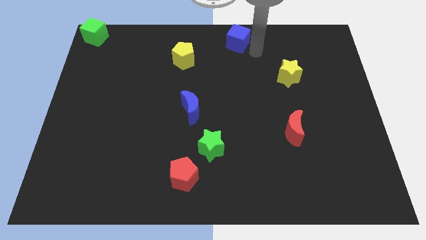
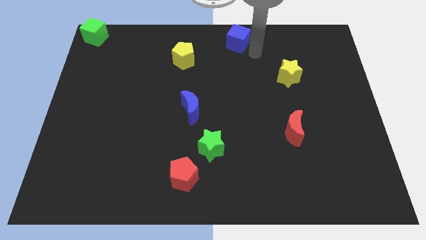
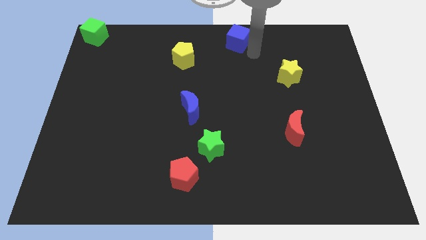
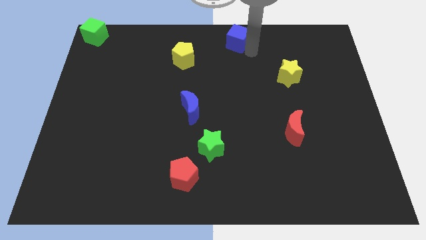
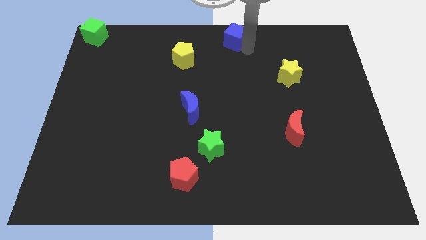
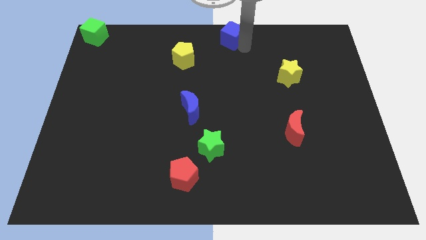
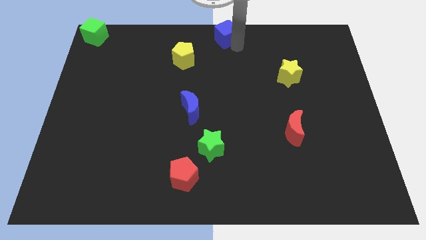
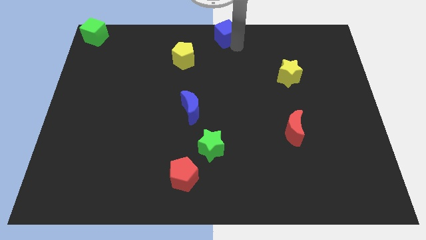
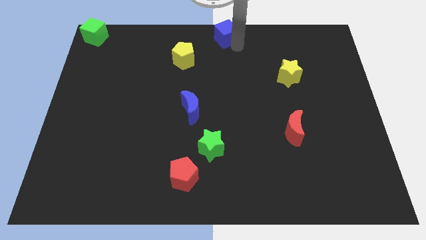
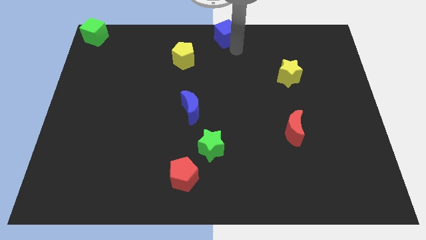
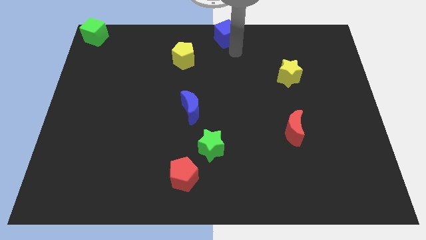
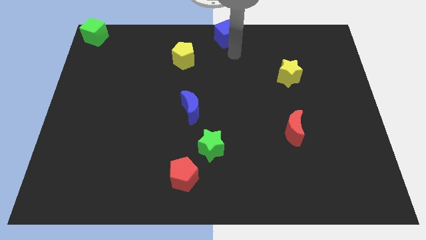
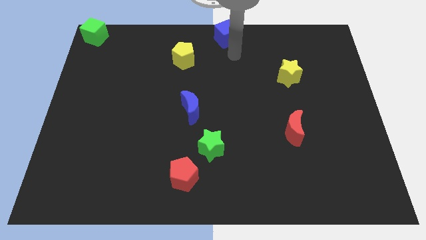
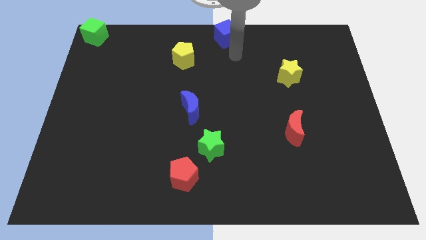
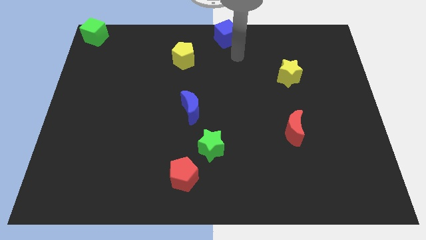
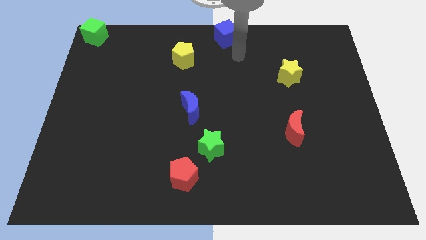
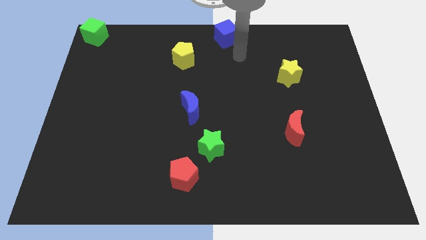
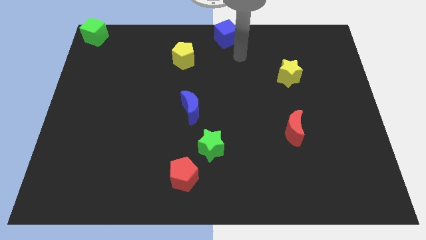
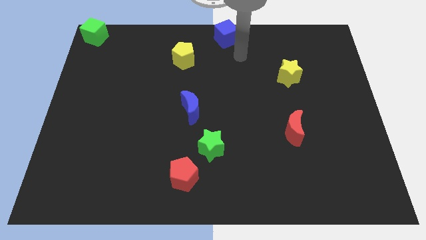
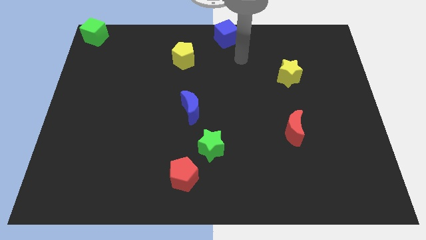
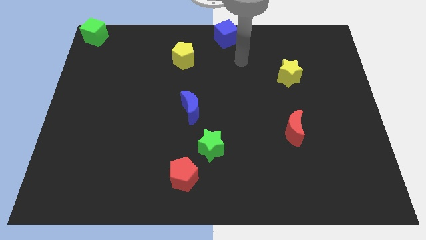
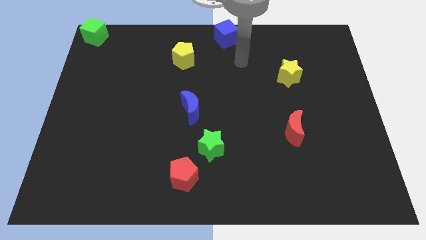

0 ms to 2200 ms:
move the blue cube at the top center of the board

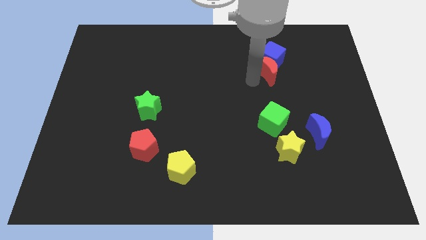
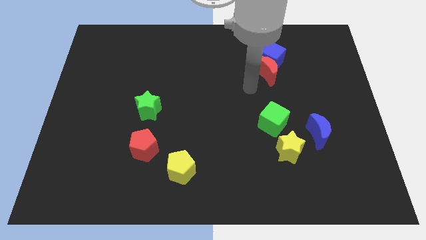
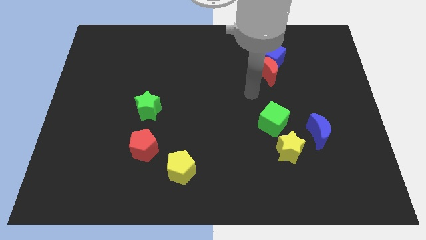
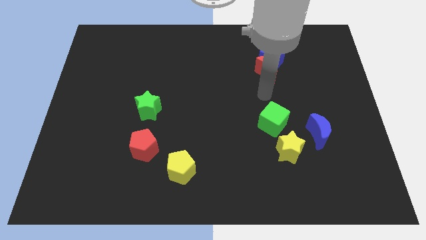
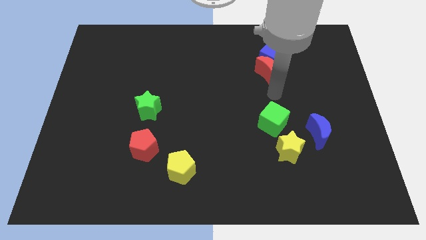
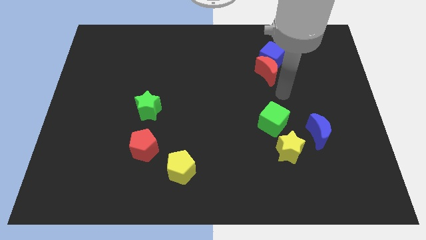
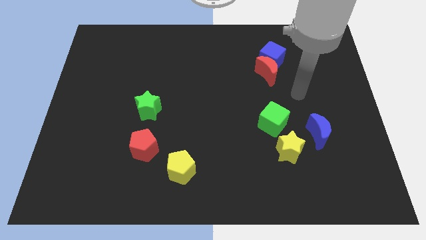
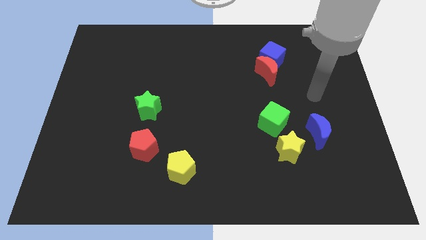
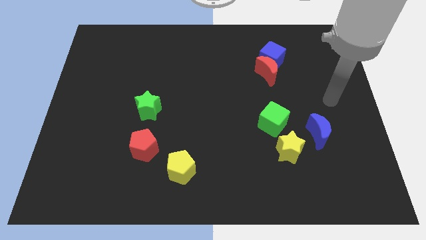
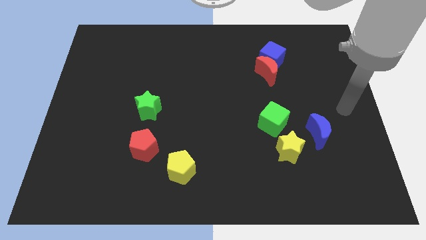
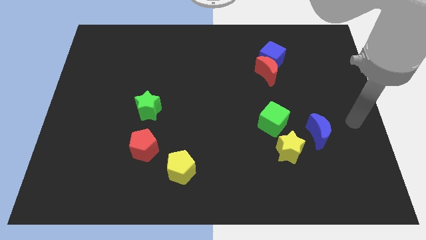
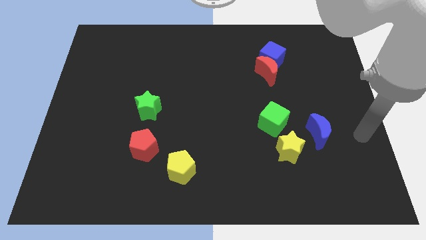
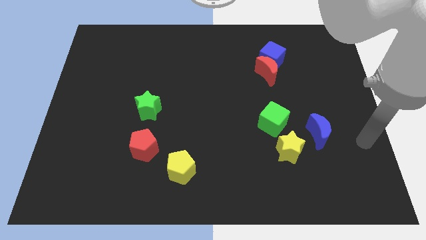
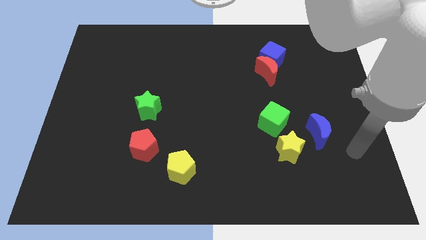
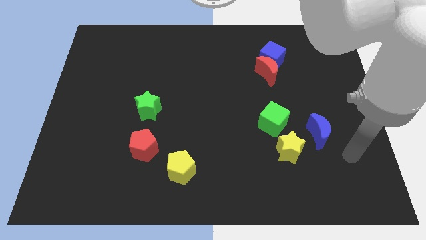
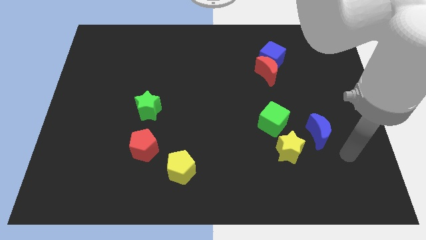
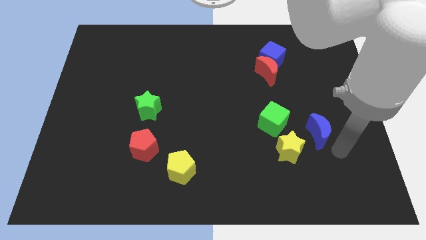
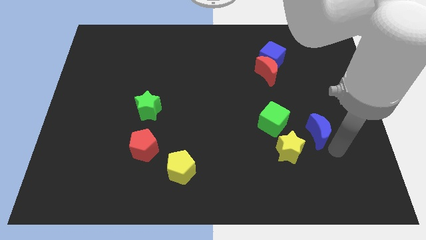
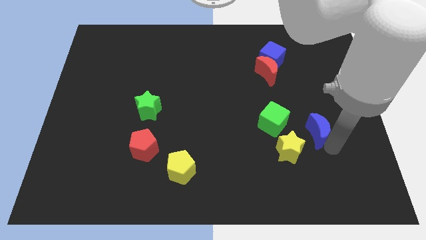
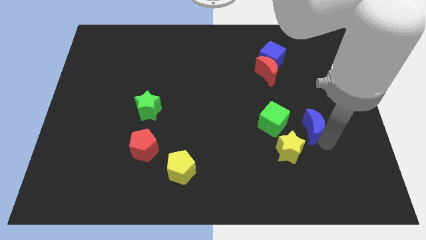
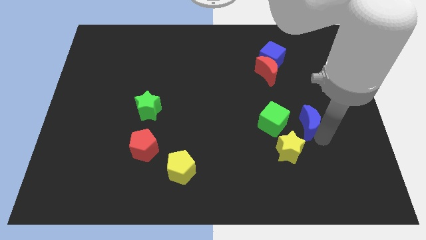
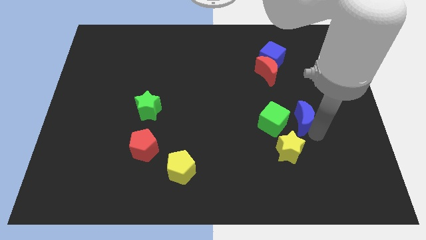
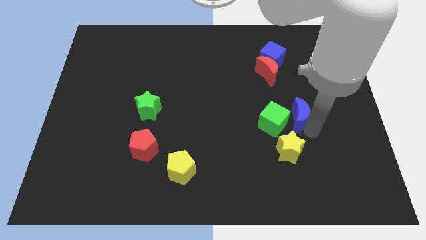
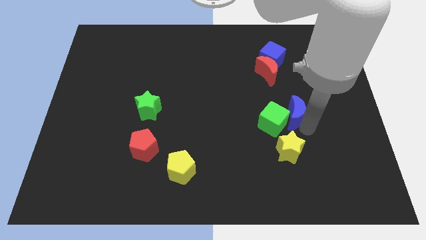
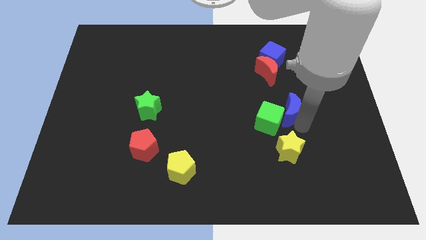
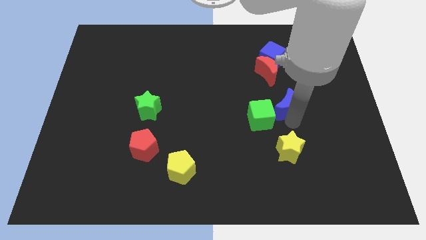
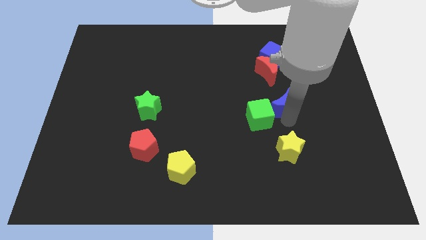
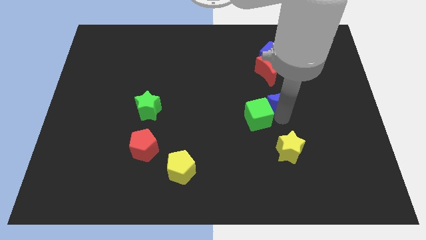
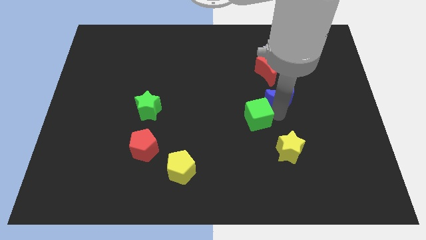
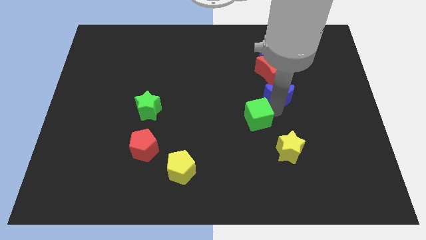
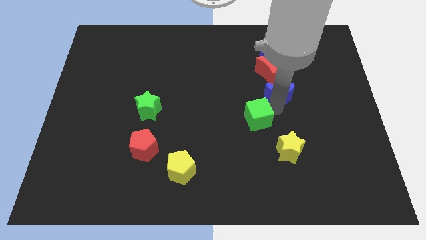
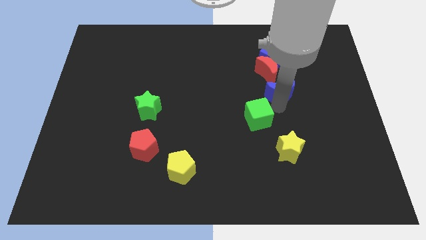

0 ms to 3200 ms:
slide the blue moon diagonally top right to the green cube

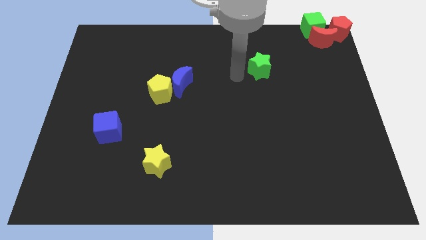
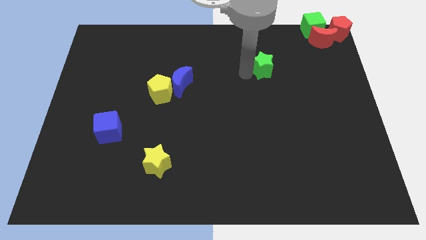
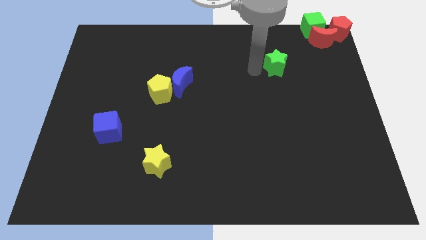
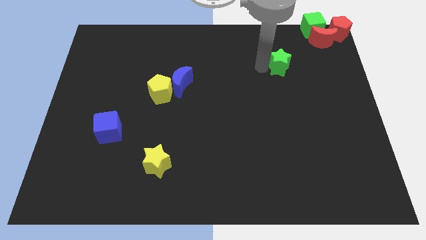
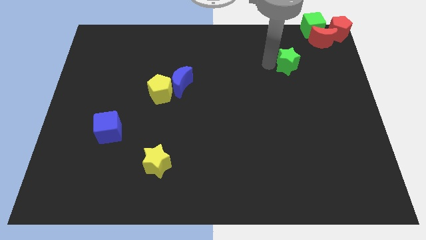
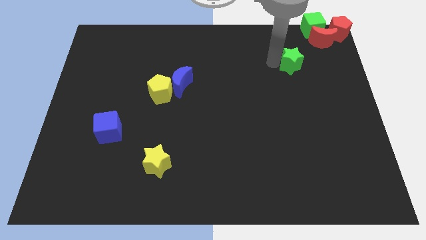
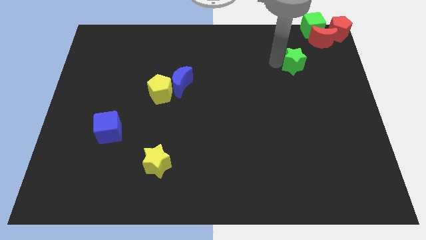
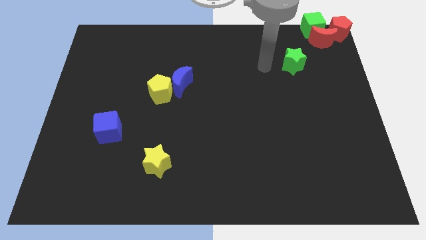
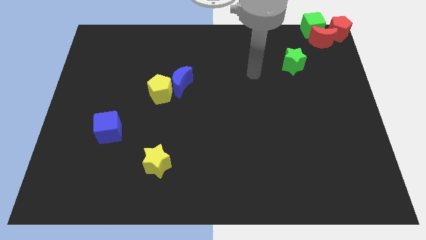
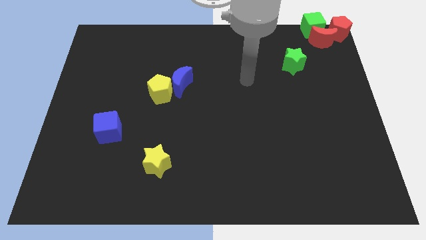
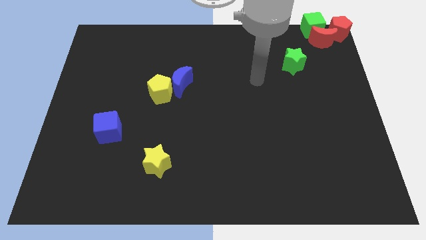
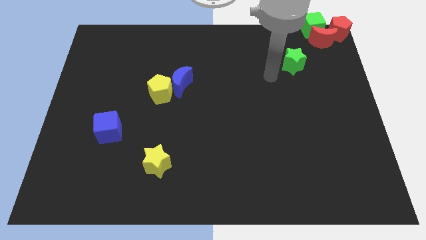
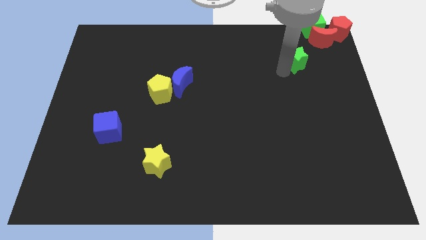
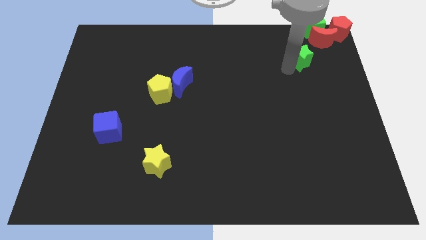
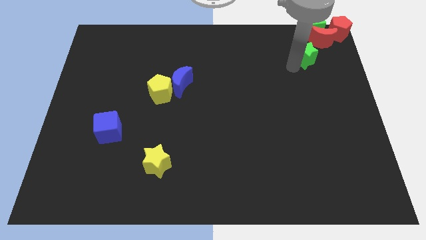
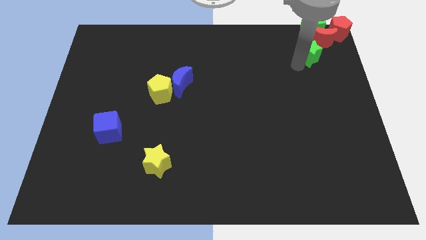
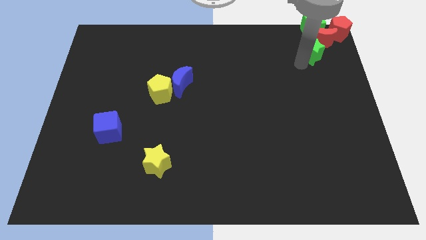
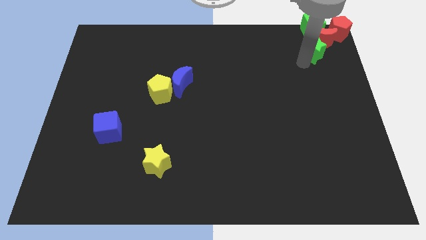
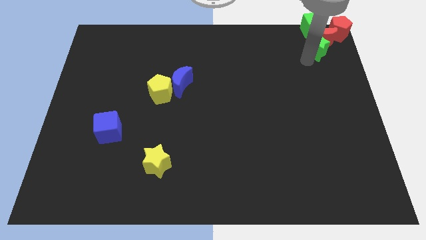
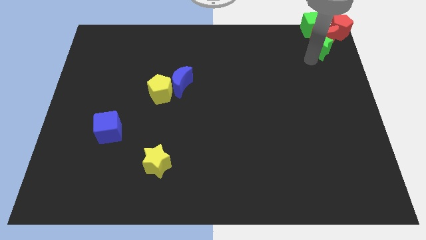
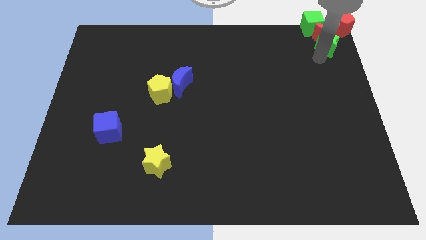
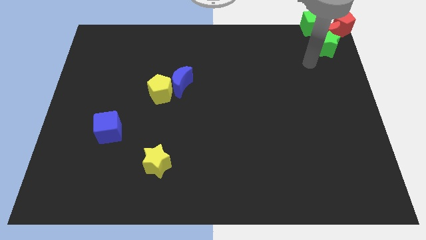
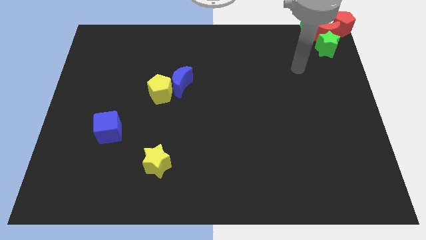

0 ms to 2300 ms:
push the green star into the group of blocks

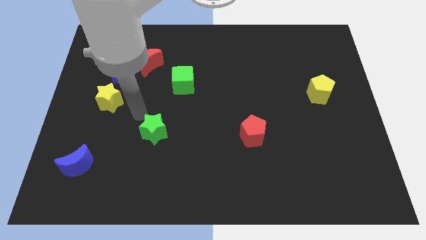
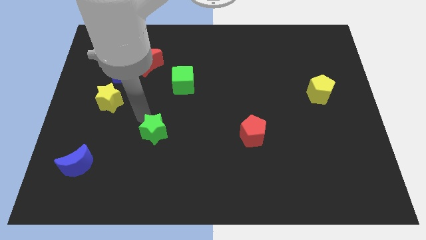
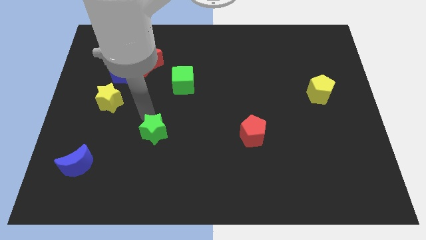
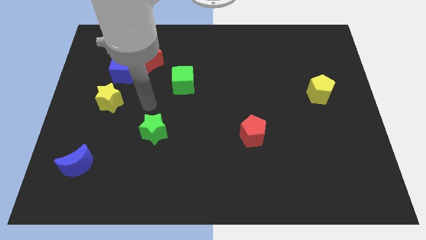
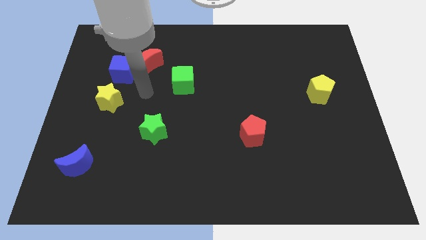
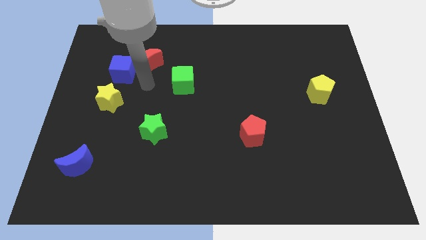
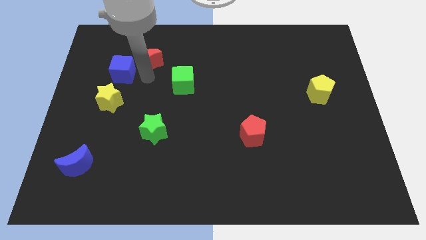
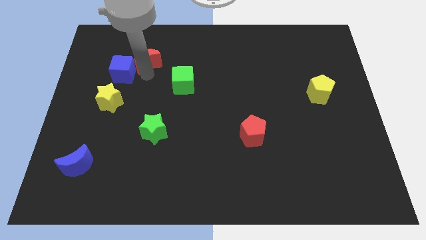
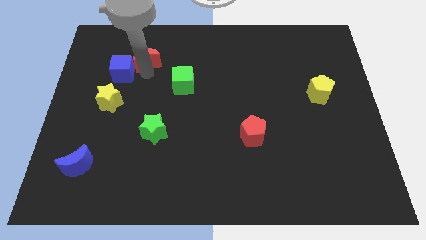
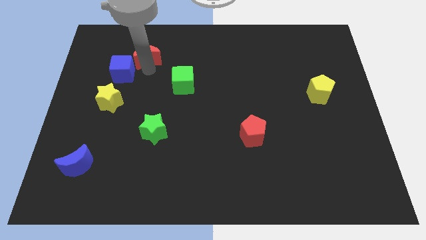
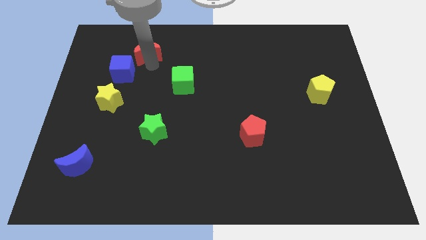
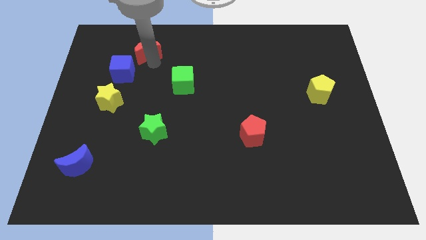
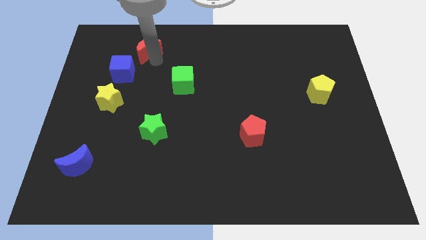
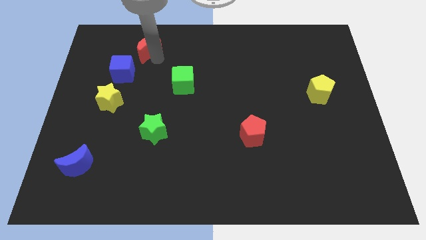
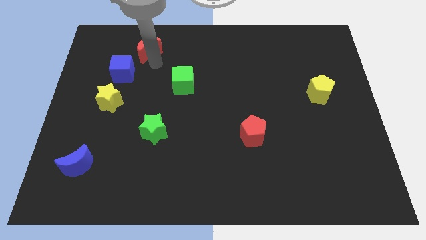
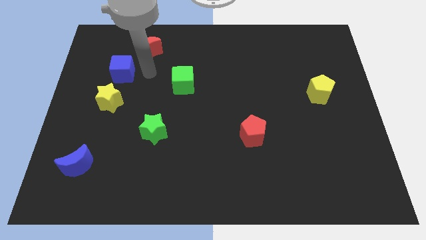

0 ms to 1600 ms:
slightly push red crescent to the top of board
